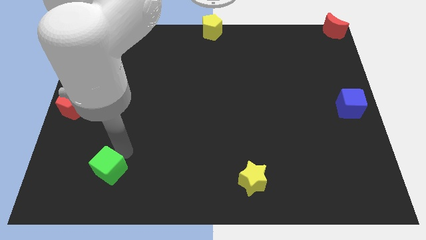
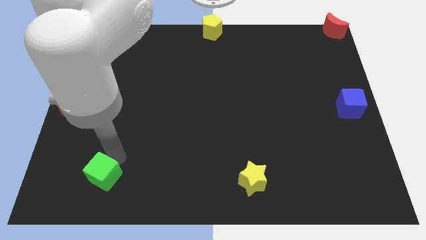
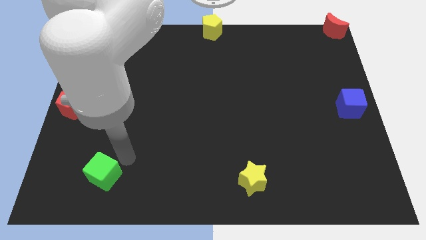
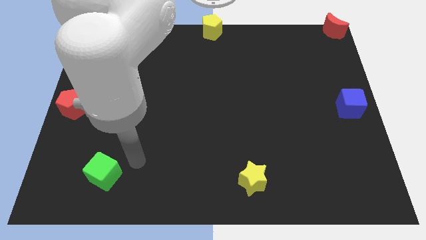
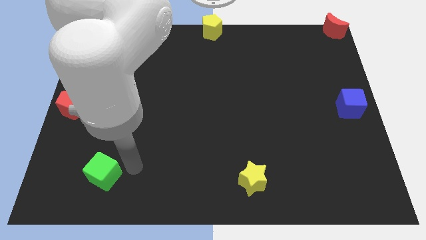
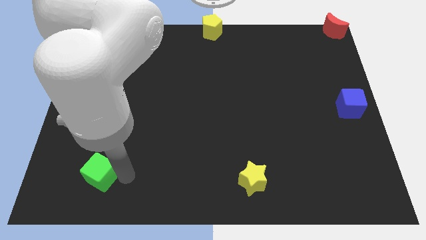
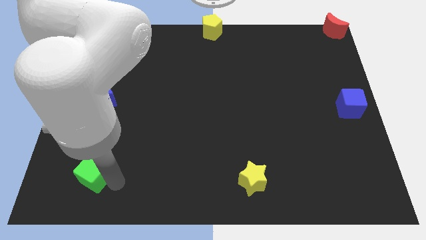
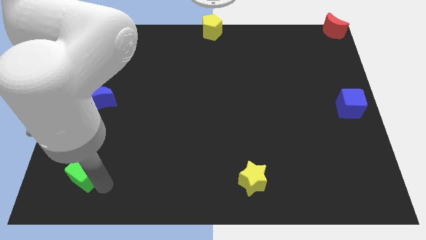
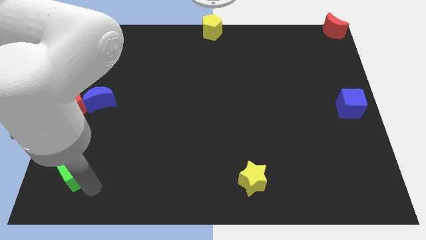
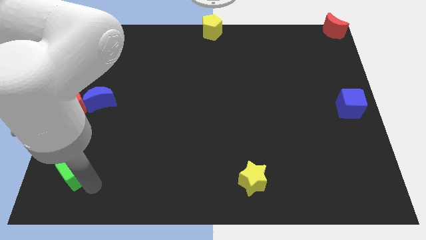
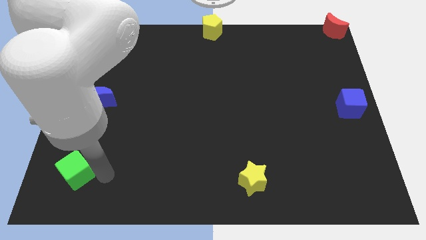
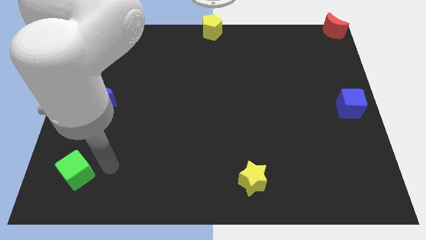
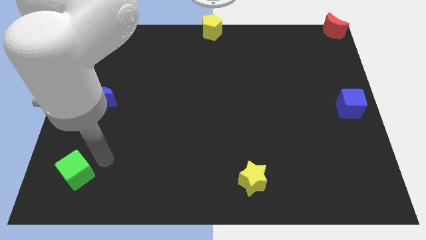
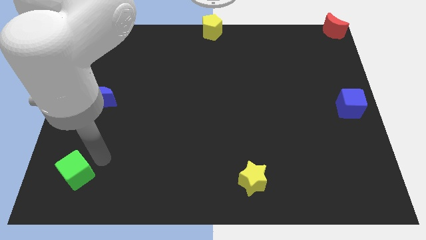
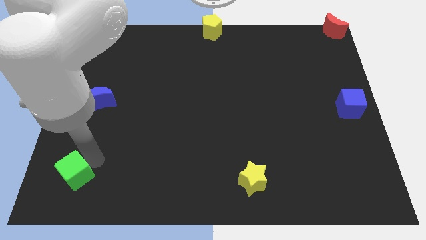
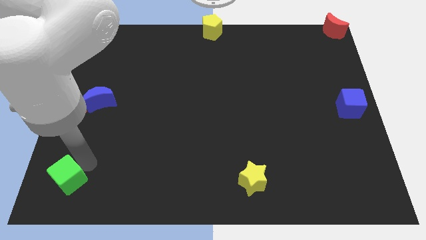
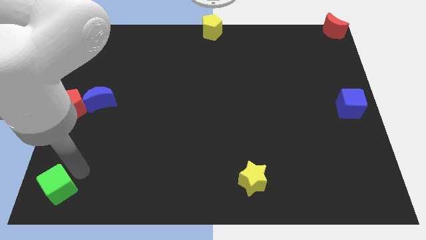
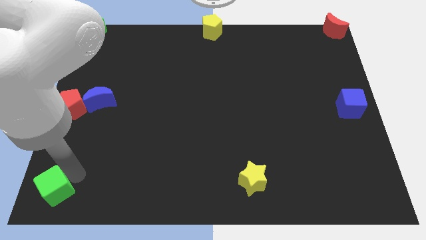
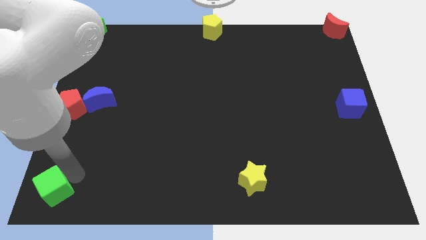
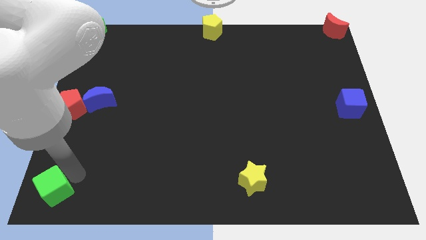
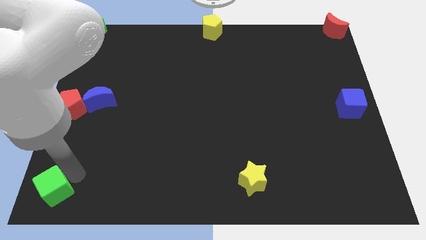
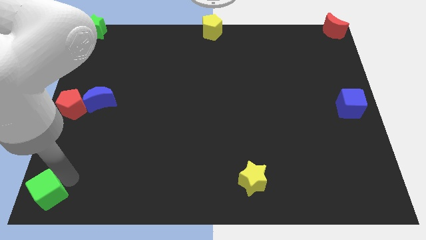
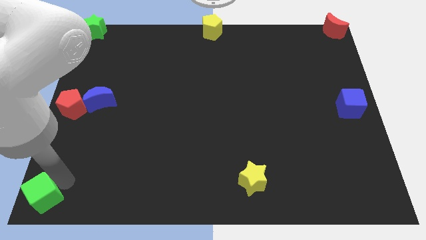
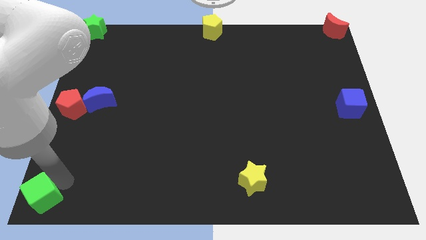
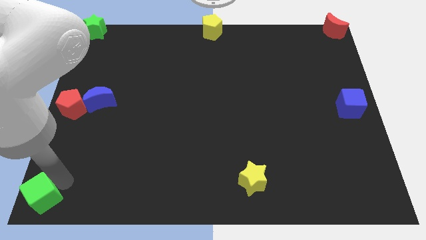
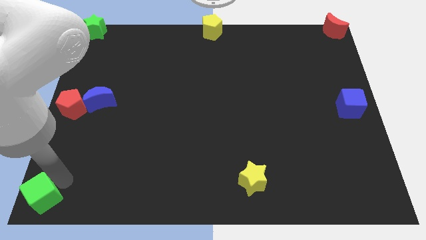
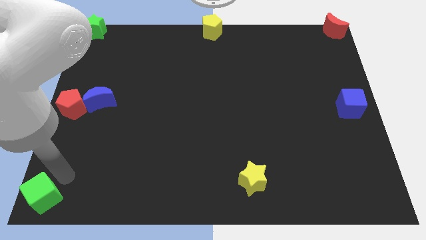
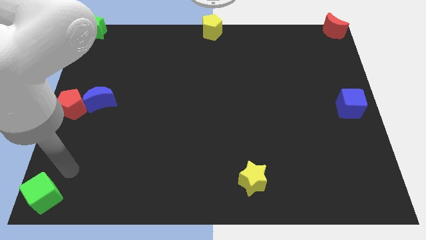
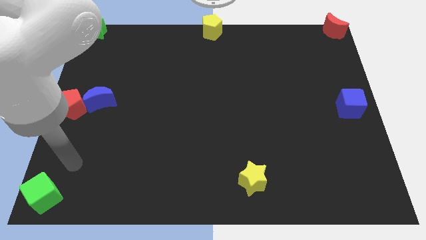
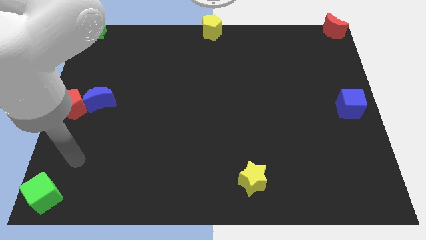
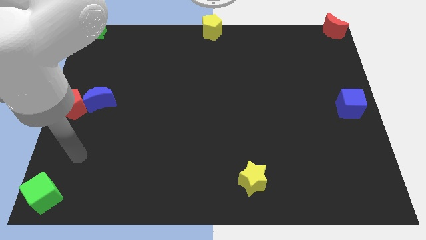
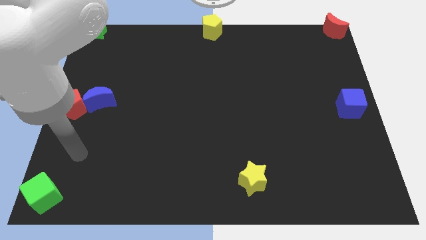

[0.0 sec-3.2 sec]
push the green cube to the left bottom of the board

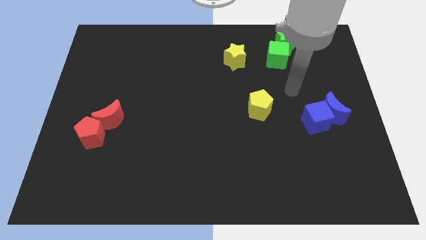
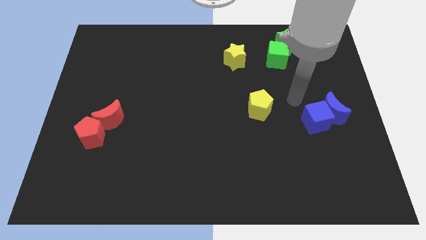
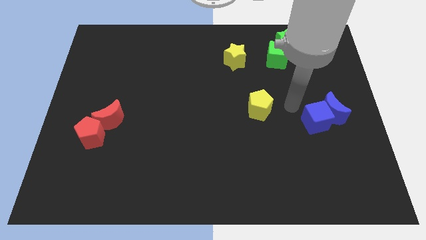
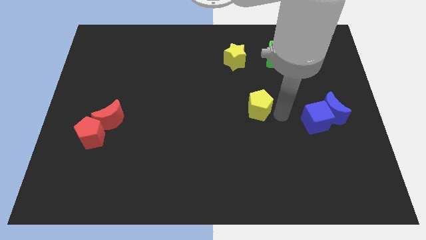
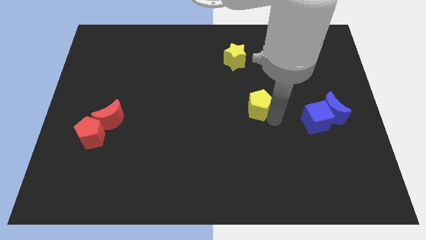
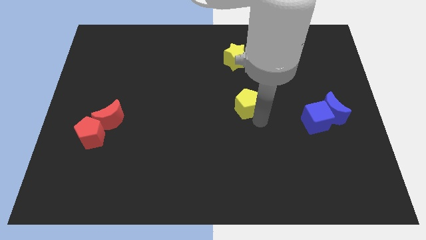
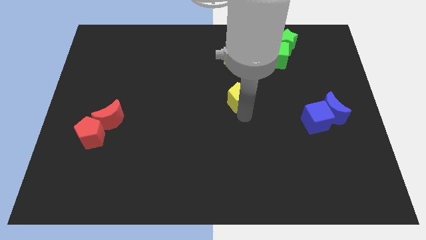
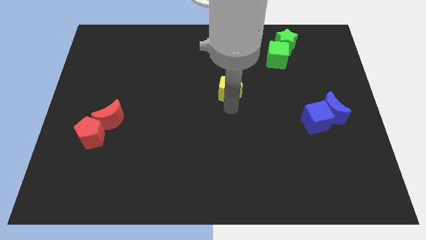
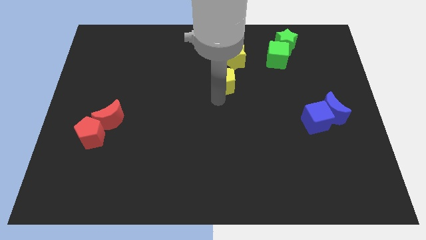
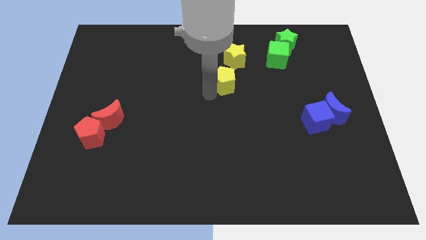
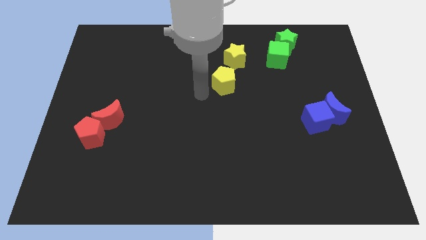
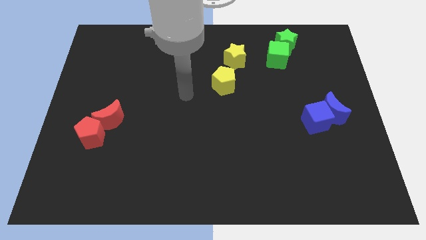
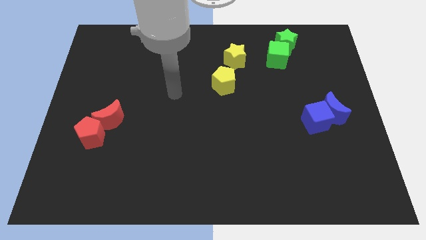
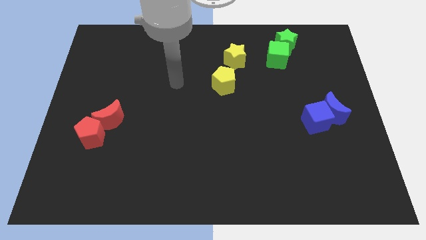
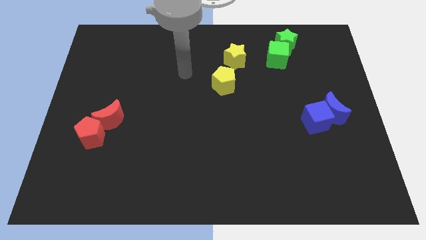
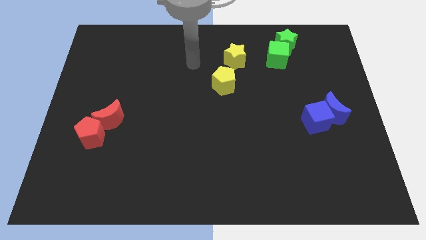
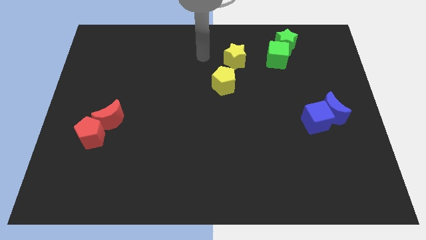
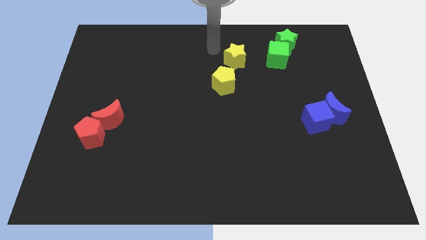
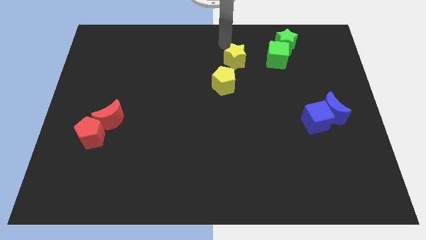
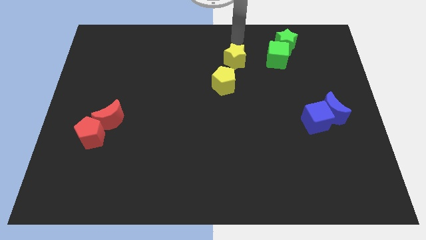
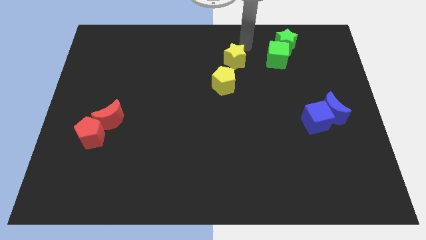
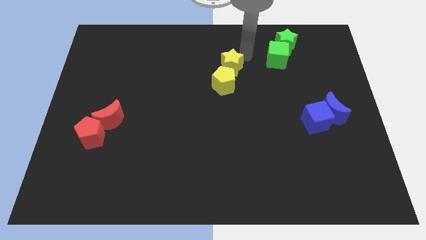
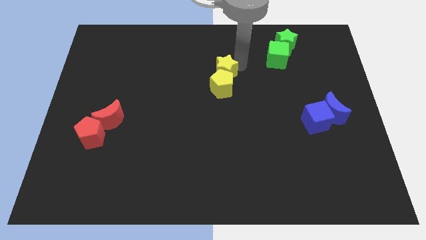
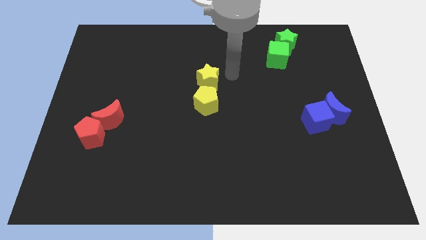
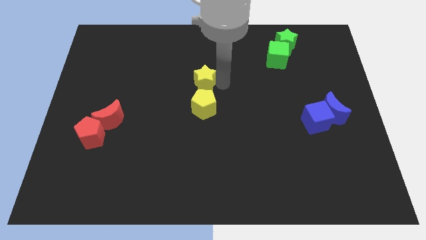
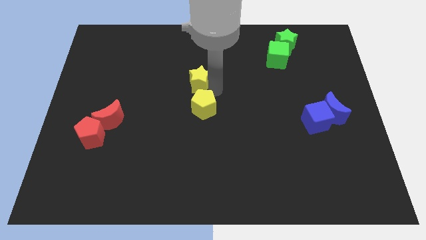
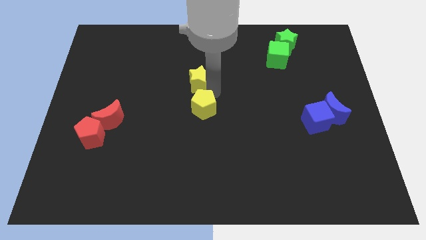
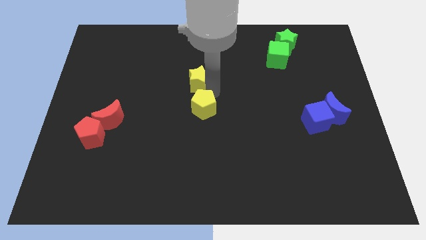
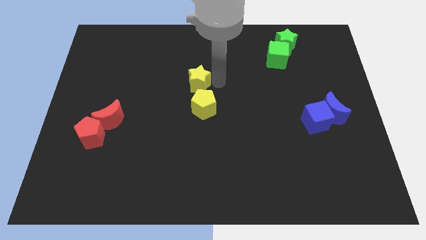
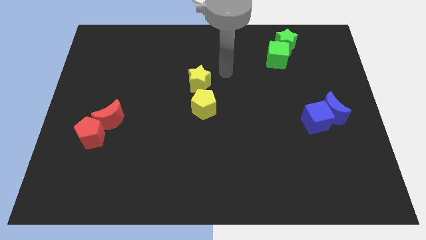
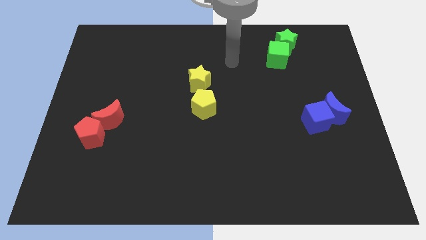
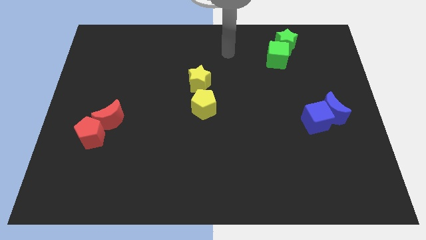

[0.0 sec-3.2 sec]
move the yellow star into yellow pentagon

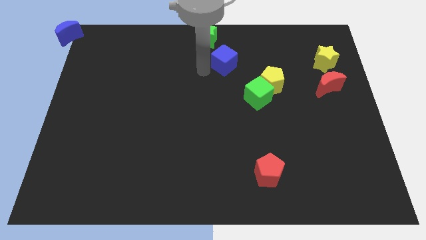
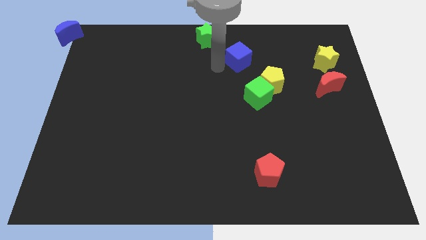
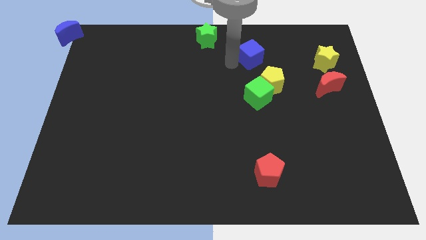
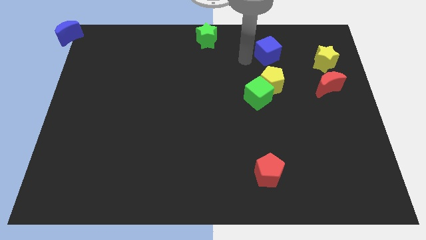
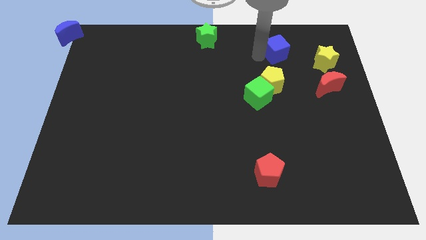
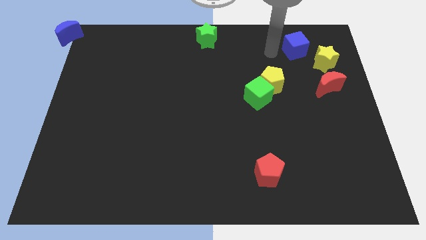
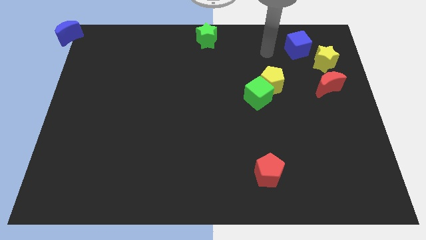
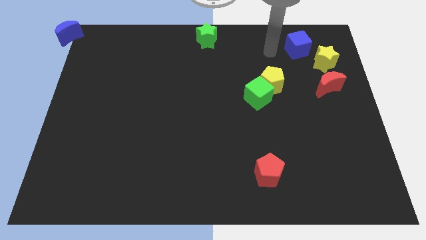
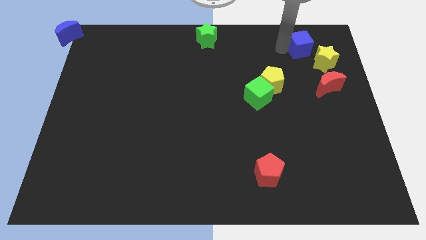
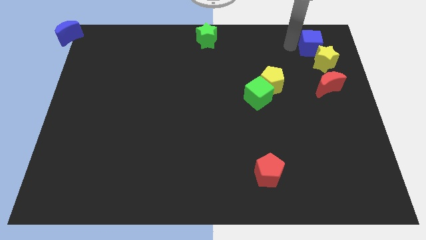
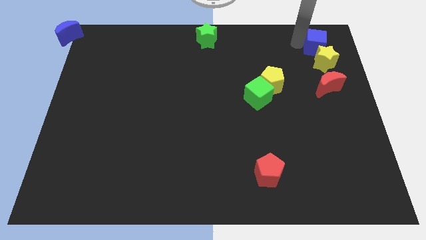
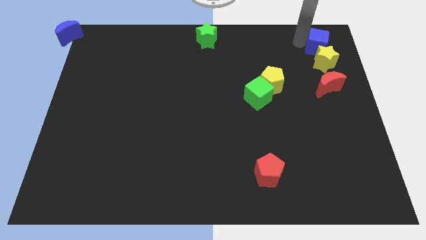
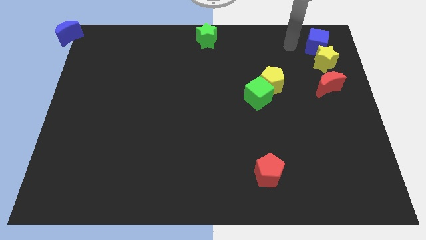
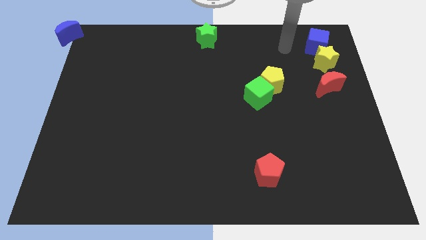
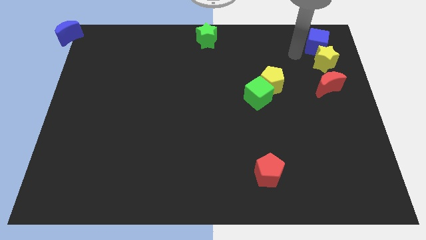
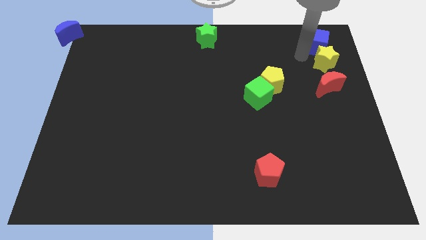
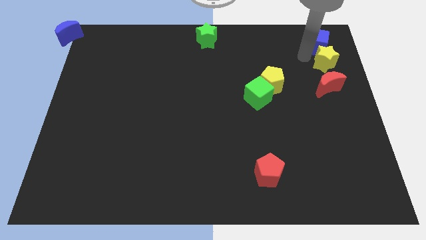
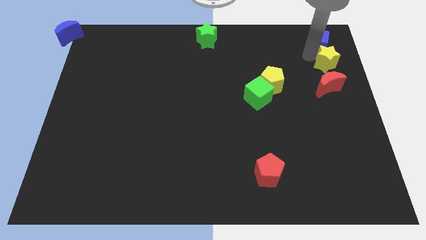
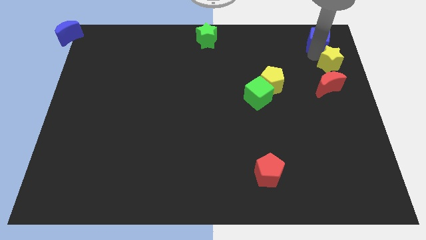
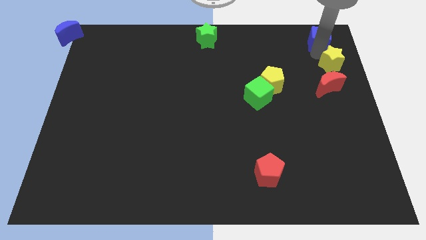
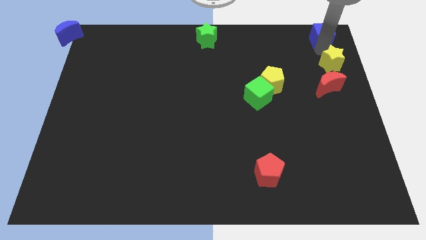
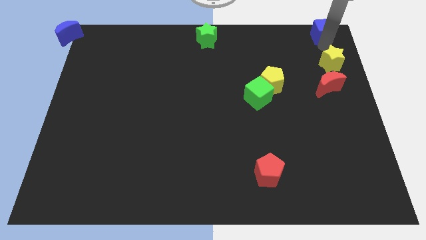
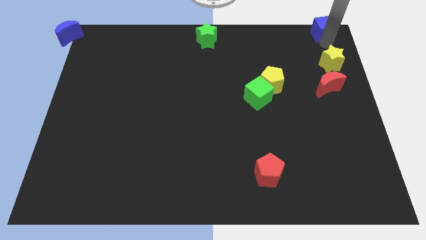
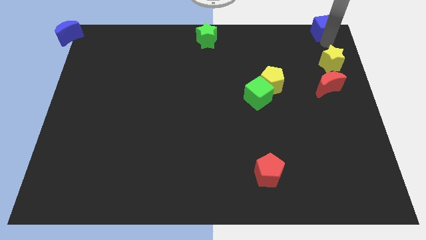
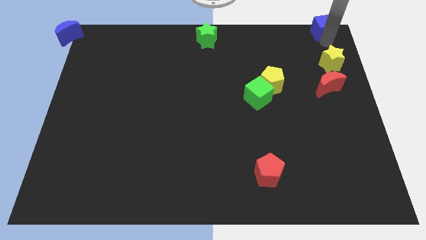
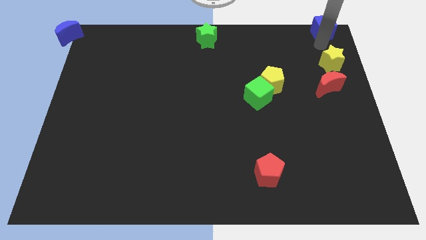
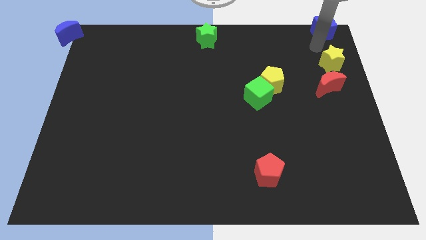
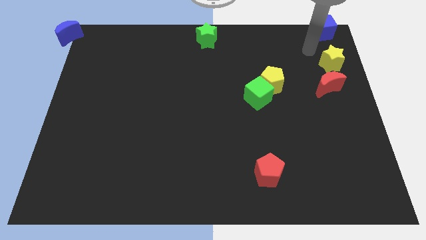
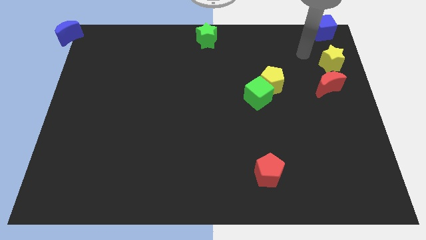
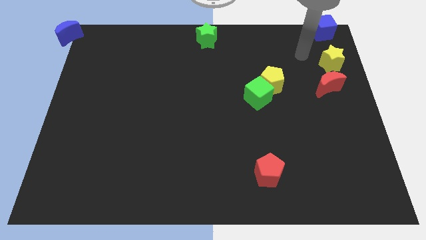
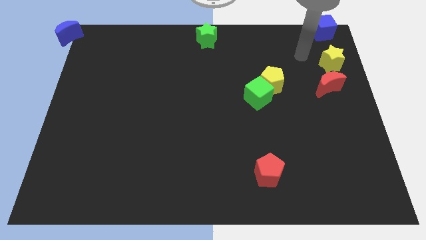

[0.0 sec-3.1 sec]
move the blue cube to the top of the yellow star
